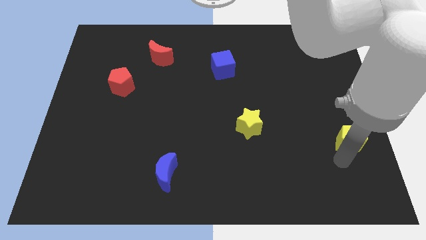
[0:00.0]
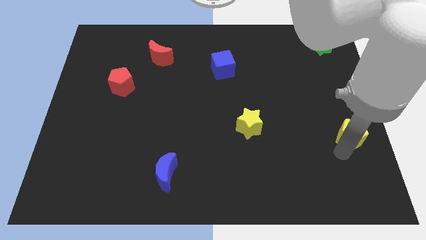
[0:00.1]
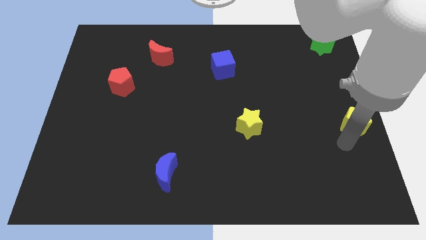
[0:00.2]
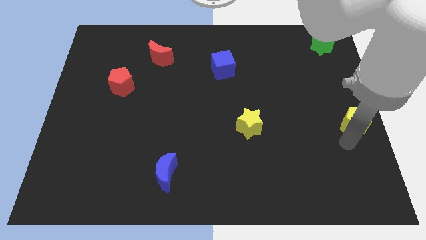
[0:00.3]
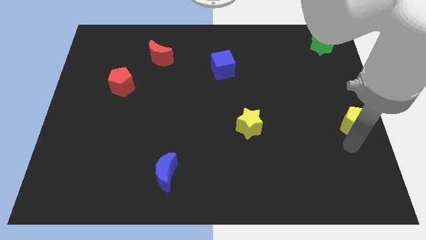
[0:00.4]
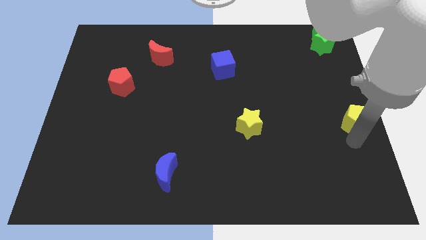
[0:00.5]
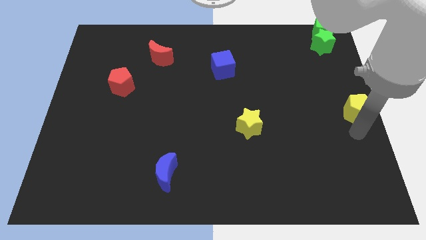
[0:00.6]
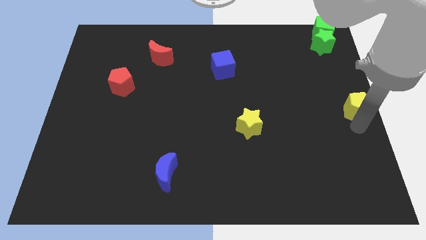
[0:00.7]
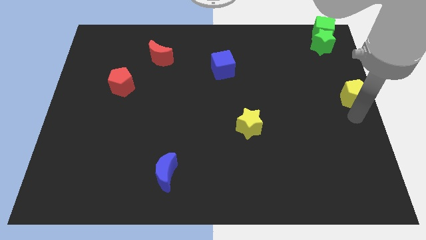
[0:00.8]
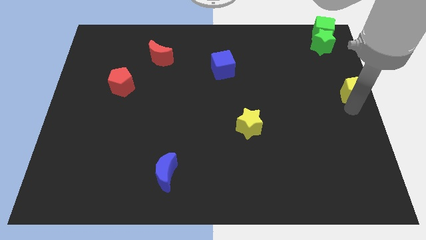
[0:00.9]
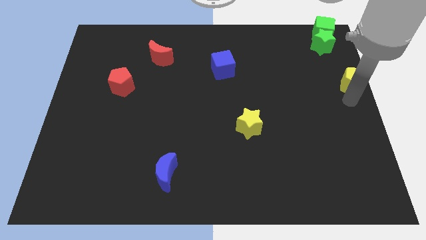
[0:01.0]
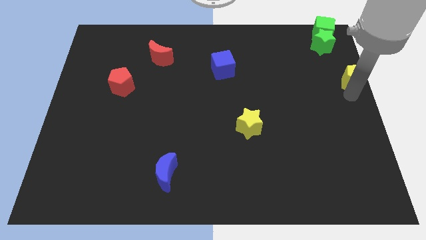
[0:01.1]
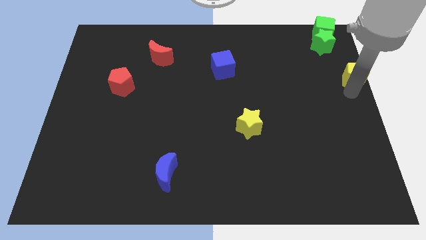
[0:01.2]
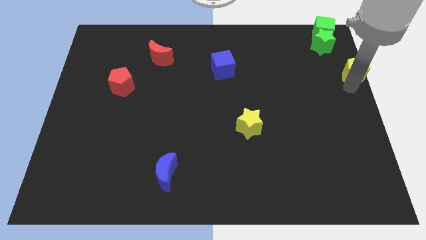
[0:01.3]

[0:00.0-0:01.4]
slide the yellow pentagon towards the green blocks

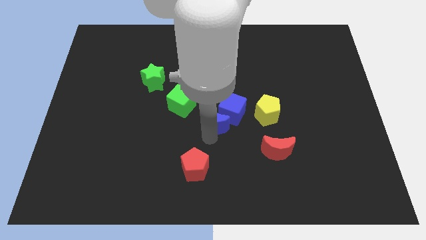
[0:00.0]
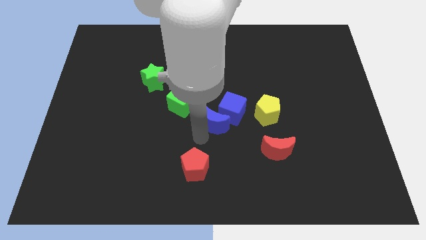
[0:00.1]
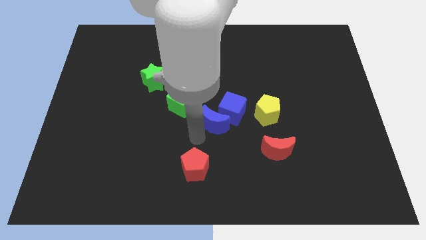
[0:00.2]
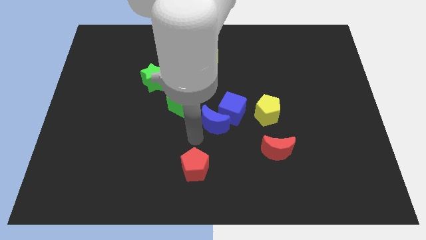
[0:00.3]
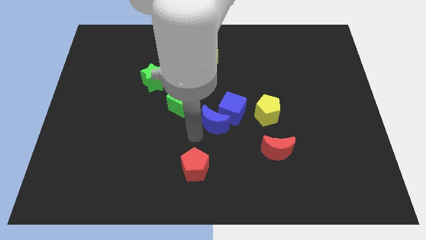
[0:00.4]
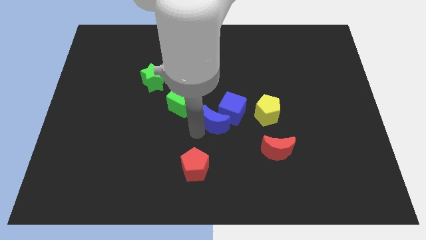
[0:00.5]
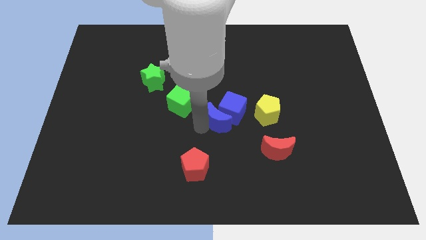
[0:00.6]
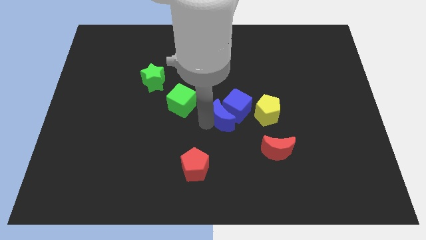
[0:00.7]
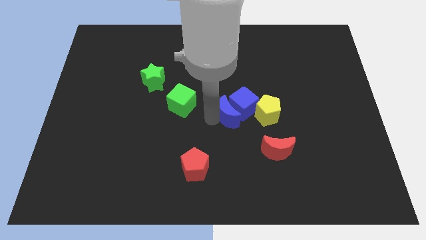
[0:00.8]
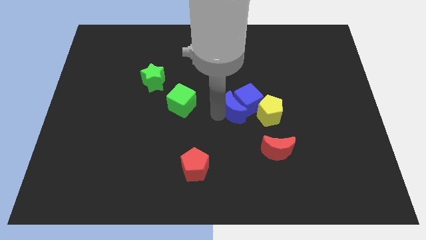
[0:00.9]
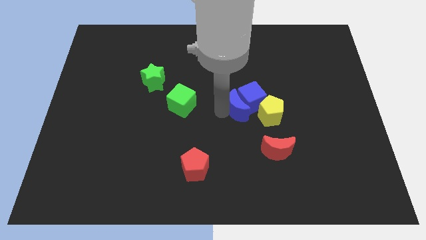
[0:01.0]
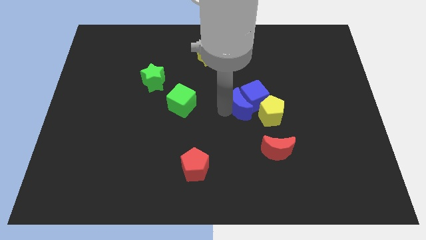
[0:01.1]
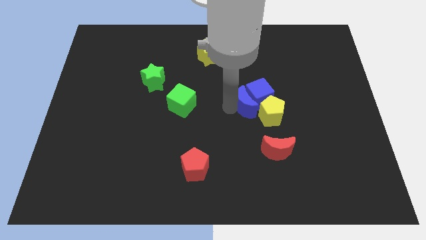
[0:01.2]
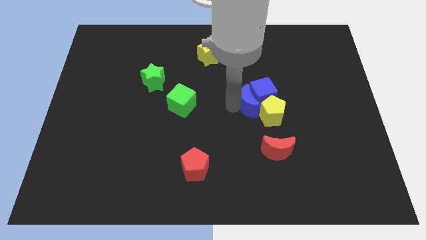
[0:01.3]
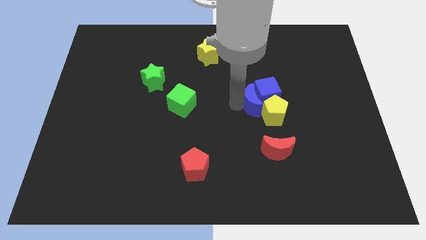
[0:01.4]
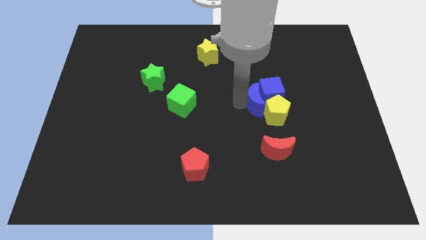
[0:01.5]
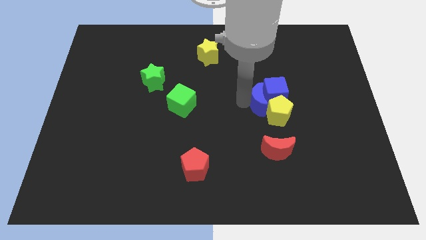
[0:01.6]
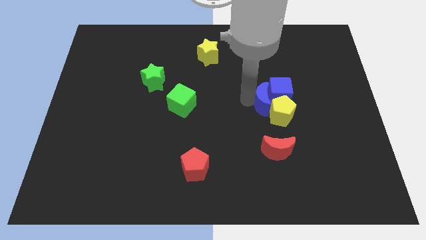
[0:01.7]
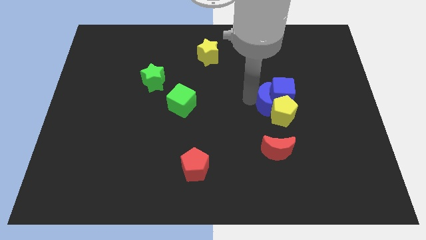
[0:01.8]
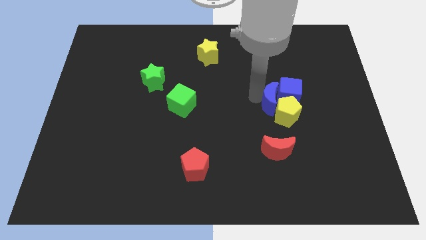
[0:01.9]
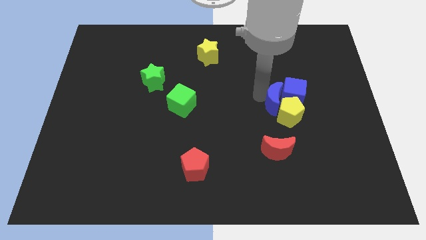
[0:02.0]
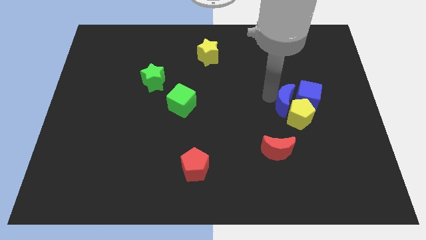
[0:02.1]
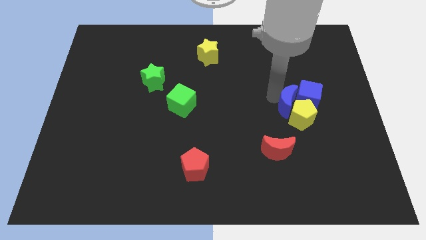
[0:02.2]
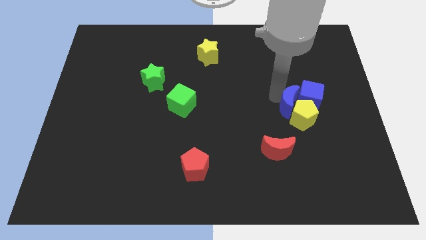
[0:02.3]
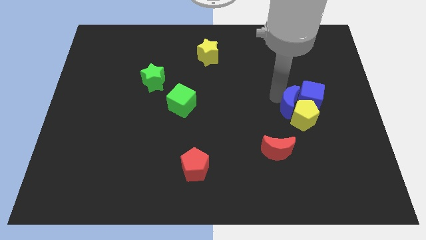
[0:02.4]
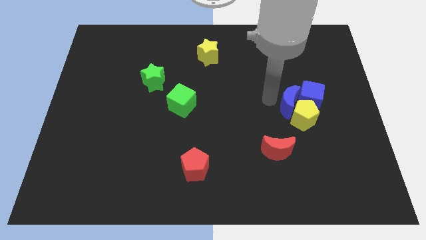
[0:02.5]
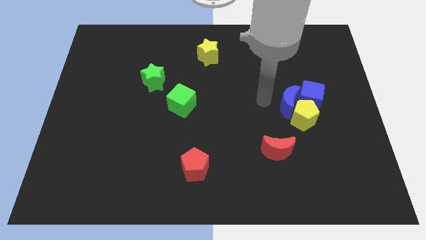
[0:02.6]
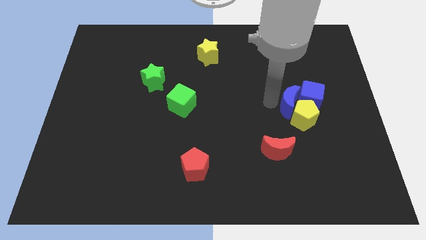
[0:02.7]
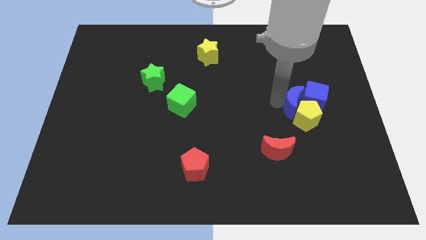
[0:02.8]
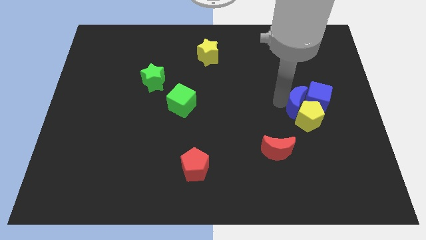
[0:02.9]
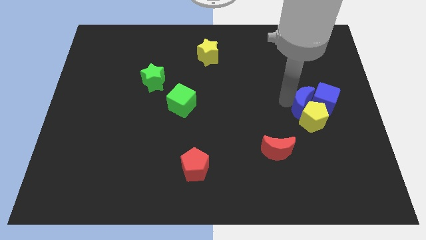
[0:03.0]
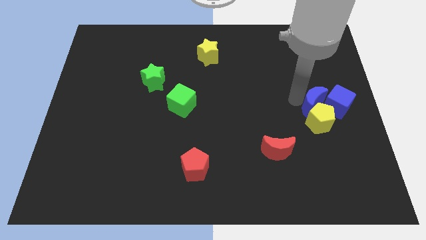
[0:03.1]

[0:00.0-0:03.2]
push the group of blue blocks and yellow pentagon towards the center right of the board

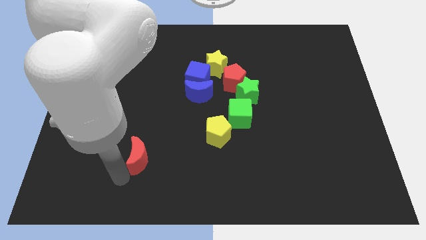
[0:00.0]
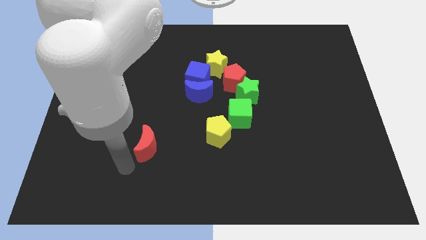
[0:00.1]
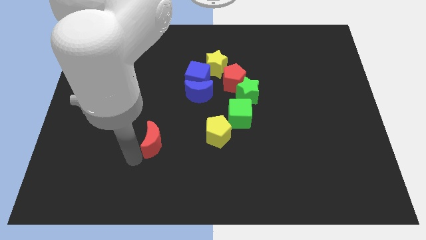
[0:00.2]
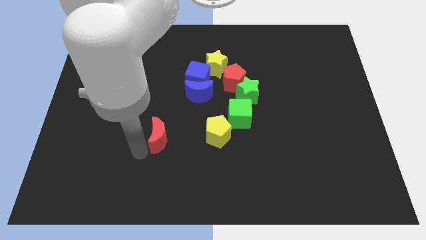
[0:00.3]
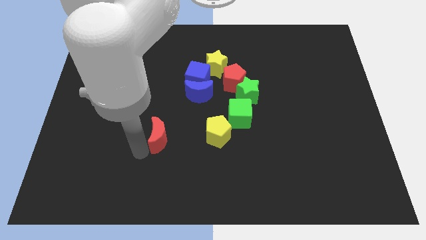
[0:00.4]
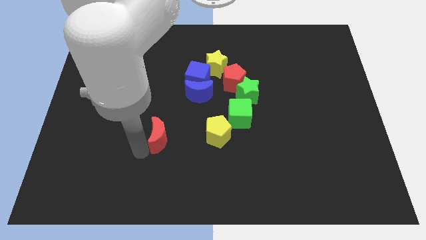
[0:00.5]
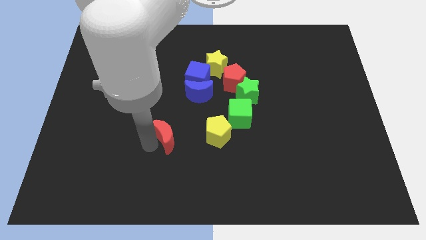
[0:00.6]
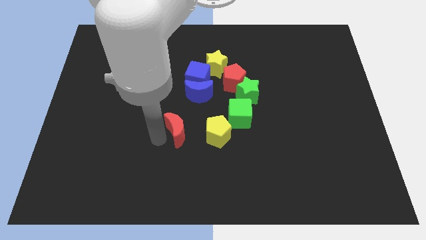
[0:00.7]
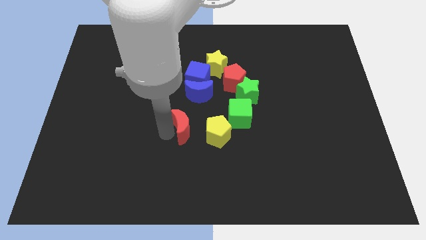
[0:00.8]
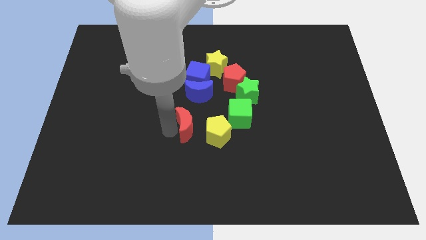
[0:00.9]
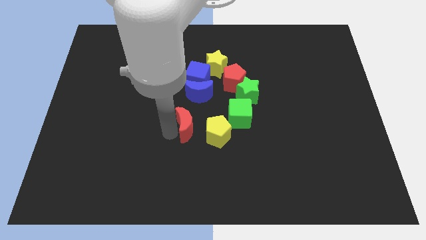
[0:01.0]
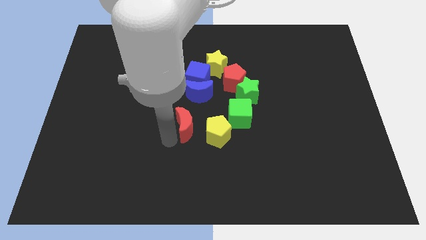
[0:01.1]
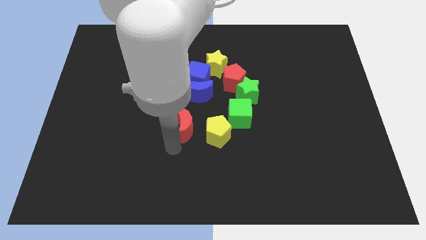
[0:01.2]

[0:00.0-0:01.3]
slide the red moon towards the left side of the yellow pentagon

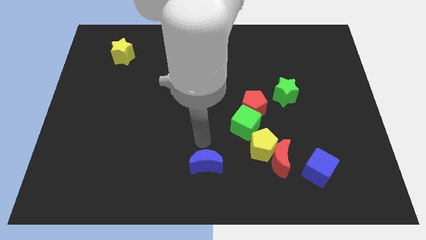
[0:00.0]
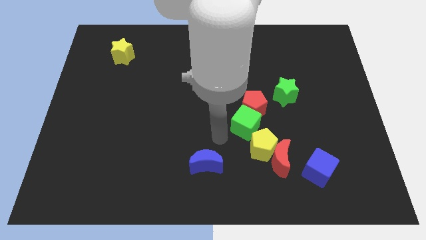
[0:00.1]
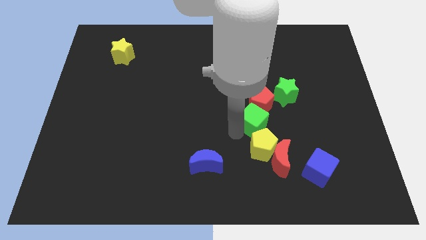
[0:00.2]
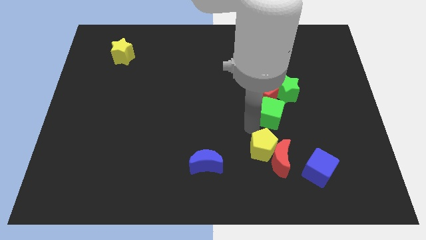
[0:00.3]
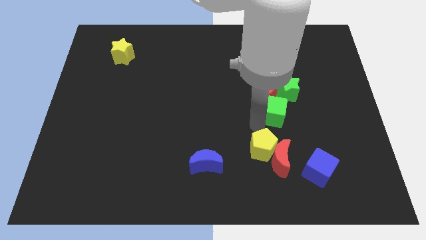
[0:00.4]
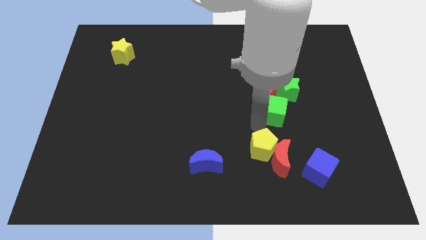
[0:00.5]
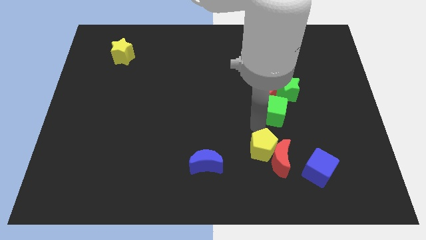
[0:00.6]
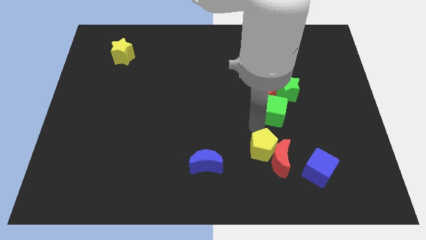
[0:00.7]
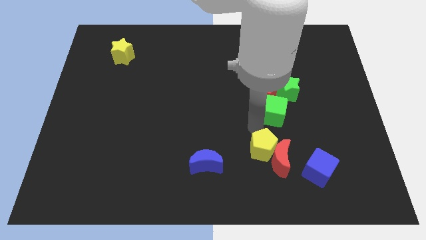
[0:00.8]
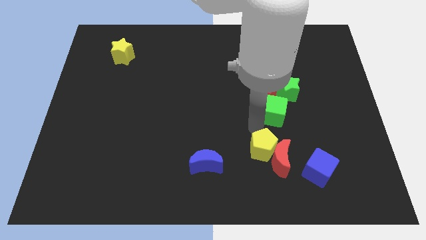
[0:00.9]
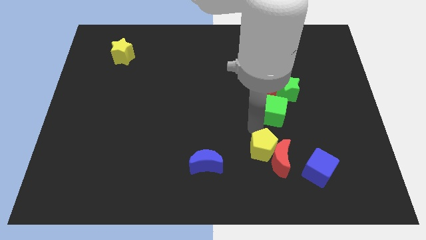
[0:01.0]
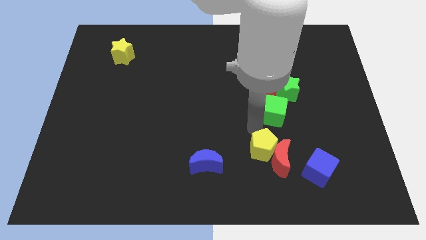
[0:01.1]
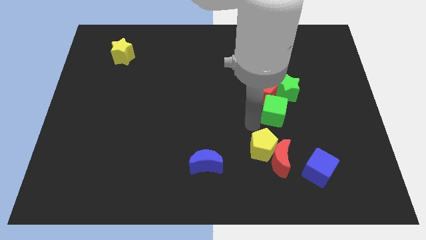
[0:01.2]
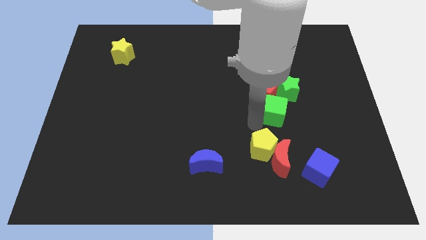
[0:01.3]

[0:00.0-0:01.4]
move the green cube slightly up

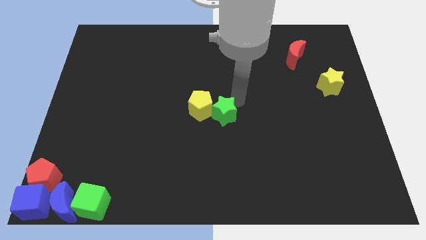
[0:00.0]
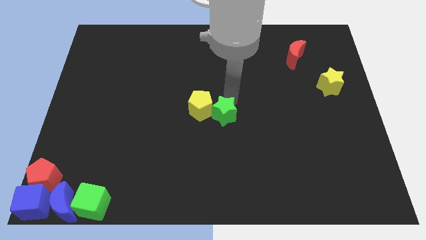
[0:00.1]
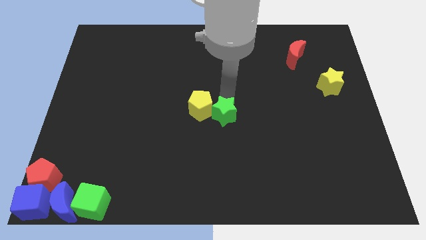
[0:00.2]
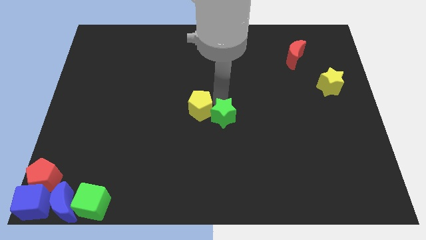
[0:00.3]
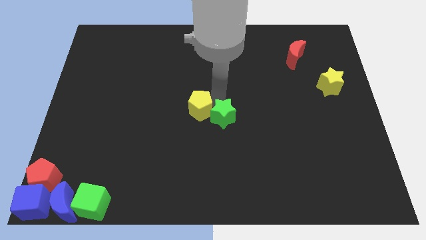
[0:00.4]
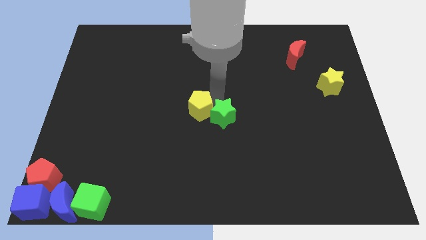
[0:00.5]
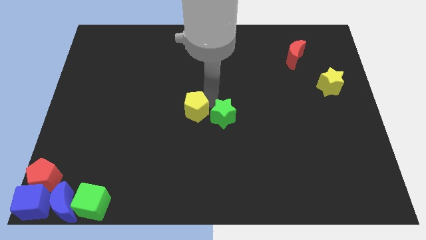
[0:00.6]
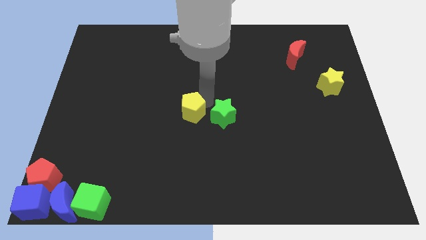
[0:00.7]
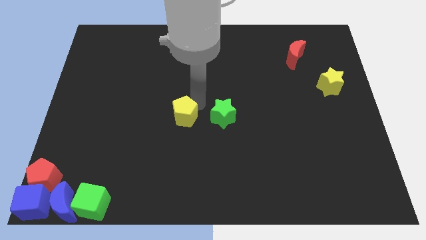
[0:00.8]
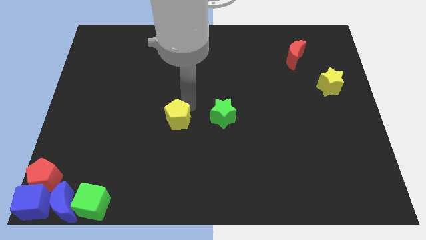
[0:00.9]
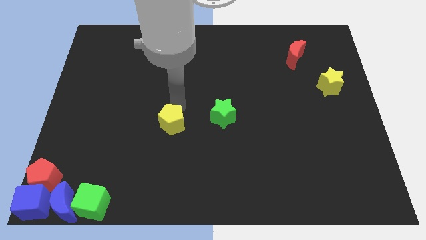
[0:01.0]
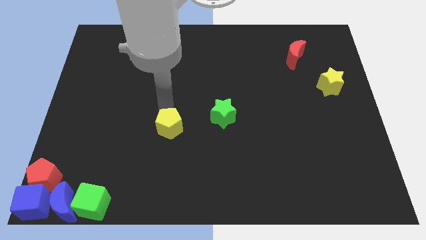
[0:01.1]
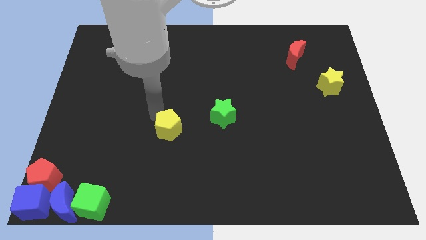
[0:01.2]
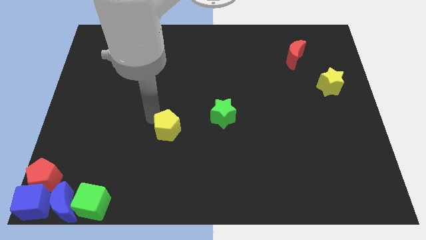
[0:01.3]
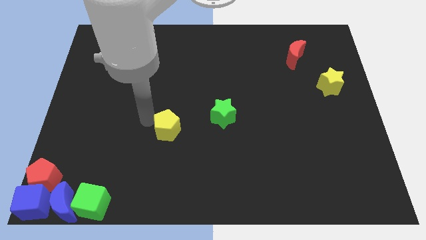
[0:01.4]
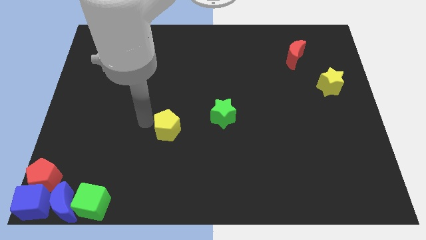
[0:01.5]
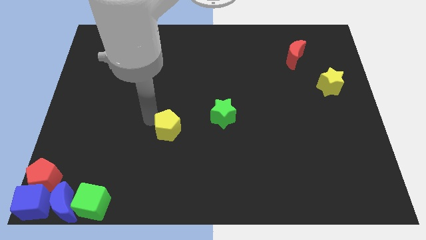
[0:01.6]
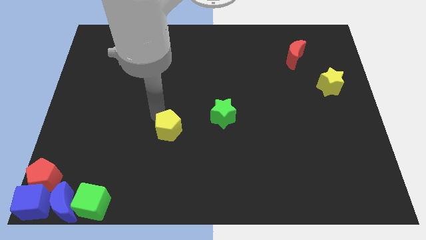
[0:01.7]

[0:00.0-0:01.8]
separate the yellow pentagon from the green star
